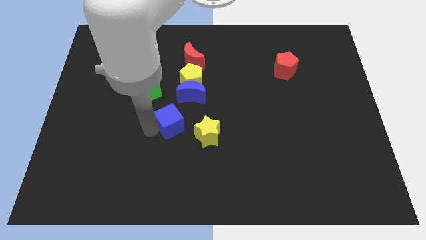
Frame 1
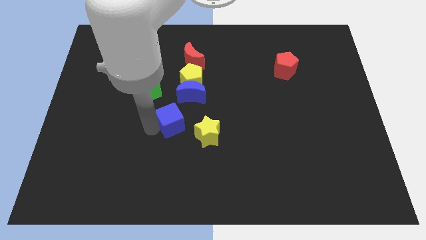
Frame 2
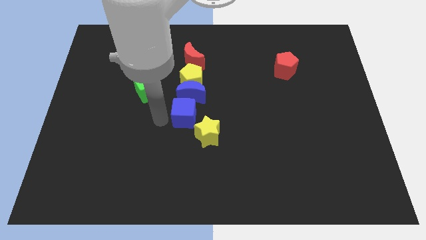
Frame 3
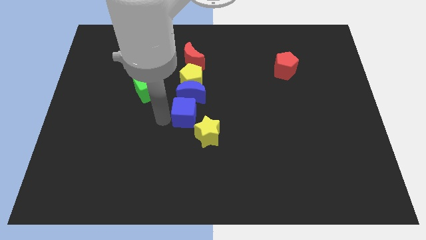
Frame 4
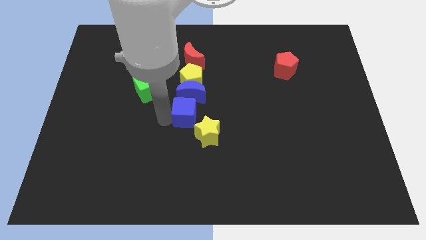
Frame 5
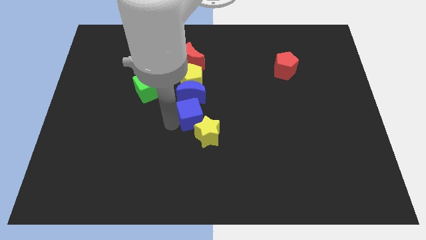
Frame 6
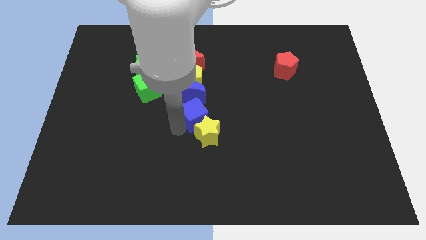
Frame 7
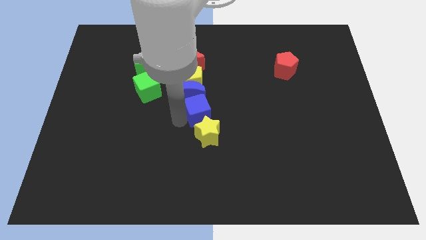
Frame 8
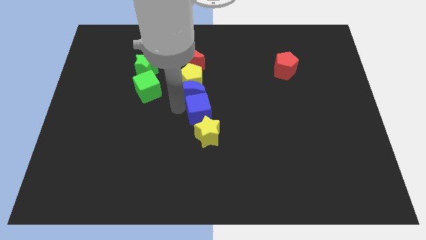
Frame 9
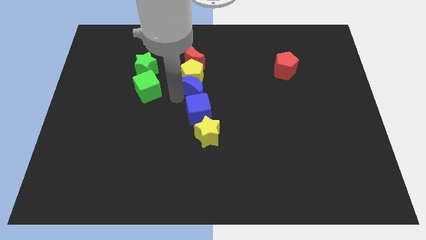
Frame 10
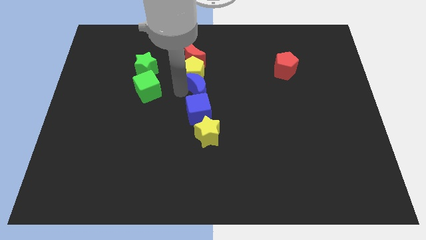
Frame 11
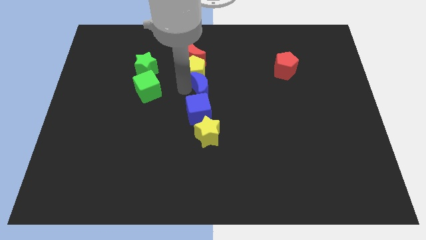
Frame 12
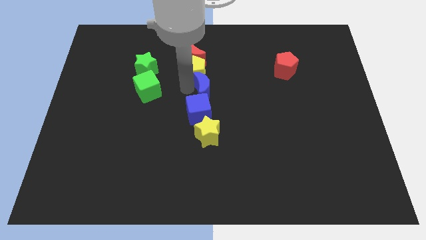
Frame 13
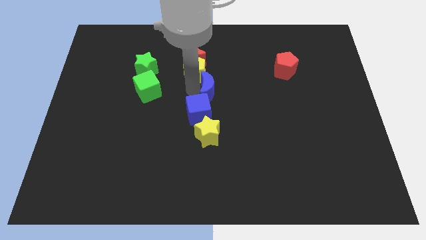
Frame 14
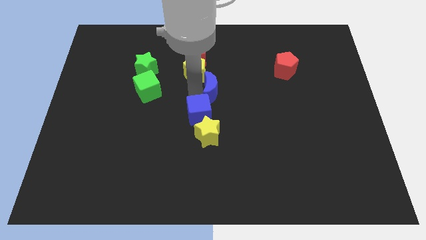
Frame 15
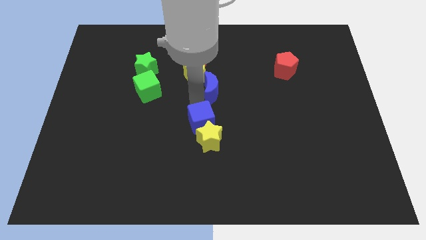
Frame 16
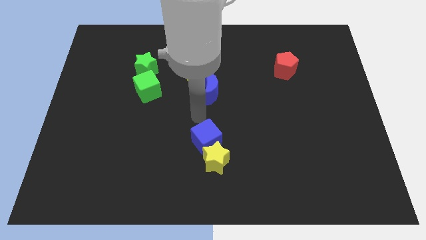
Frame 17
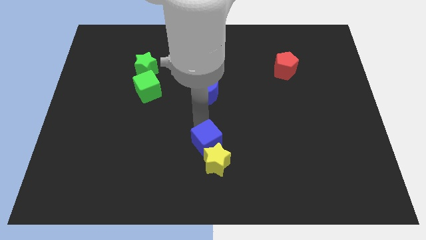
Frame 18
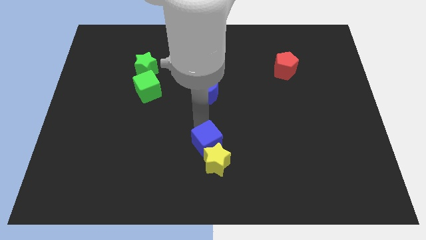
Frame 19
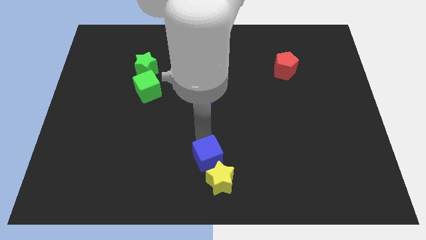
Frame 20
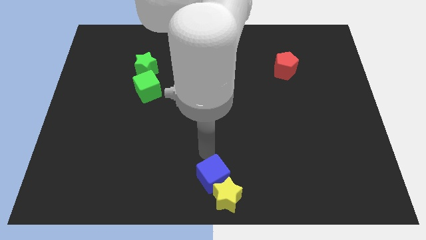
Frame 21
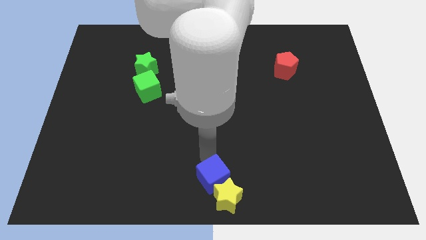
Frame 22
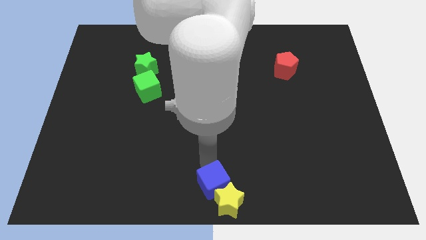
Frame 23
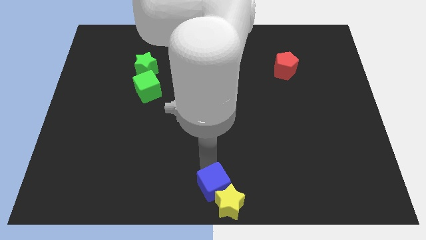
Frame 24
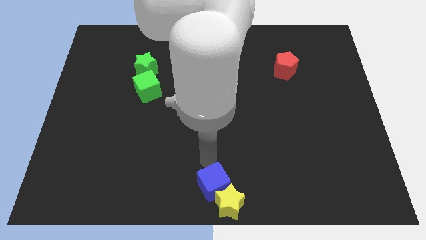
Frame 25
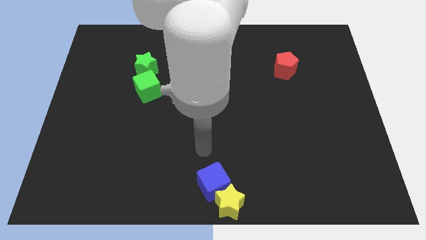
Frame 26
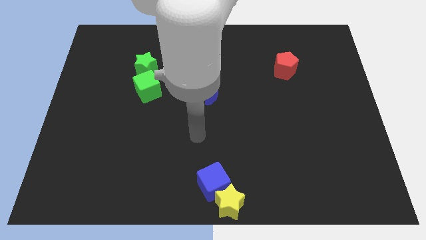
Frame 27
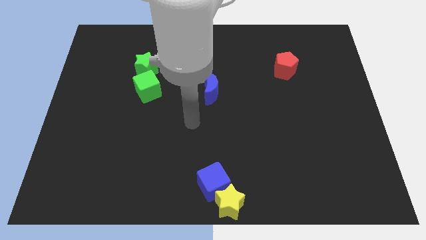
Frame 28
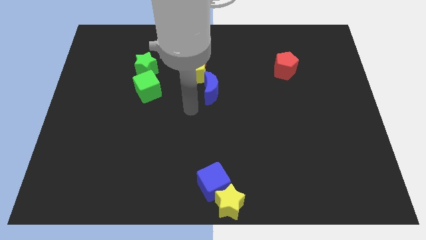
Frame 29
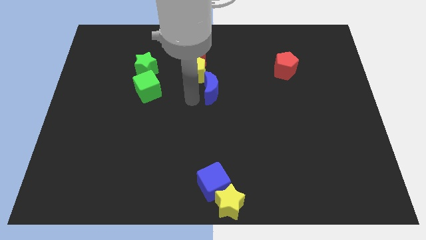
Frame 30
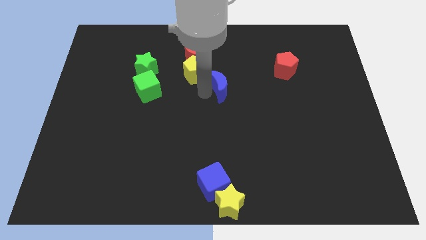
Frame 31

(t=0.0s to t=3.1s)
place the blue cube and the yellow star at the bottom center

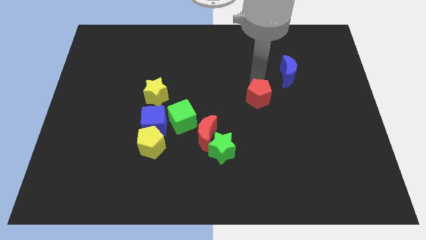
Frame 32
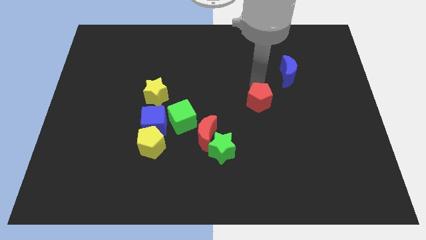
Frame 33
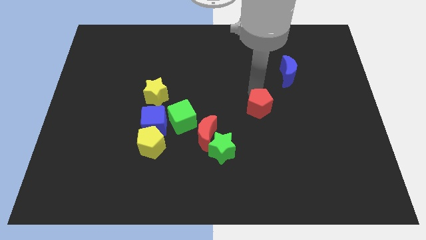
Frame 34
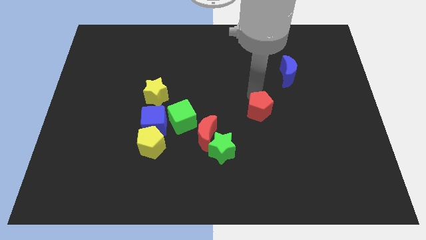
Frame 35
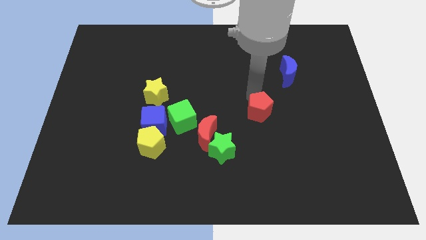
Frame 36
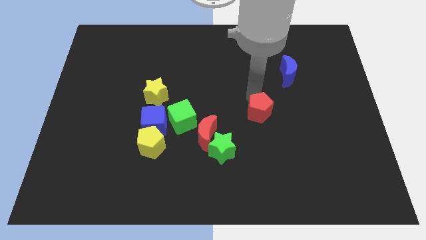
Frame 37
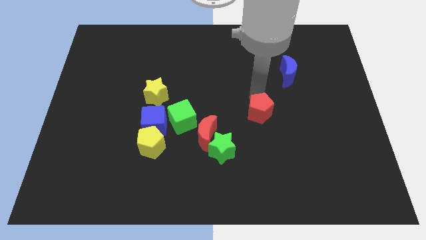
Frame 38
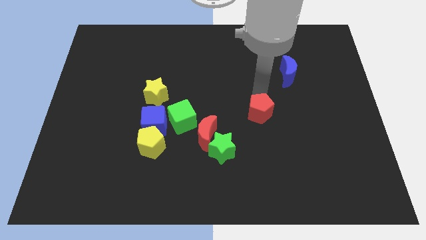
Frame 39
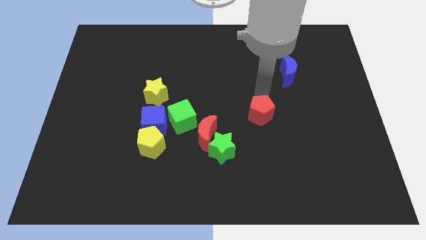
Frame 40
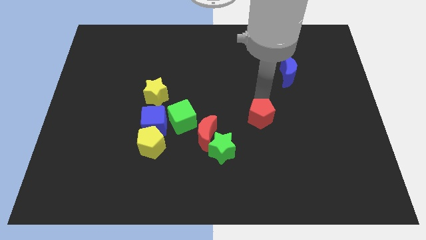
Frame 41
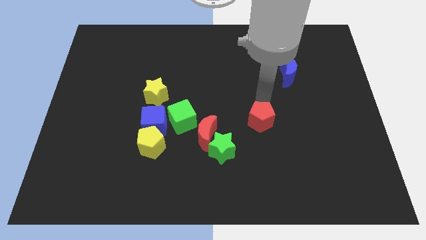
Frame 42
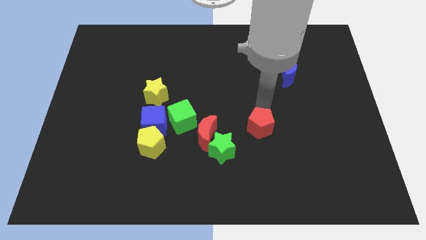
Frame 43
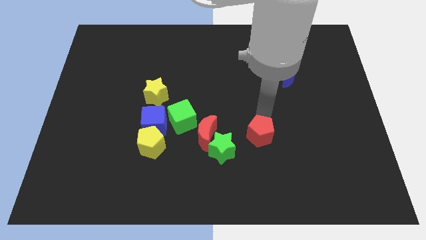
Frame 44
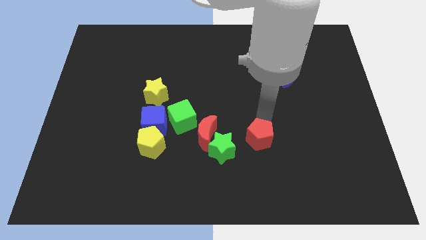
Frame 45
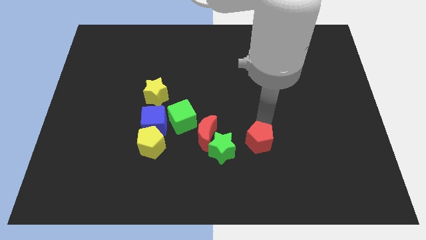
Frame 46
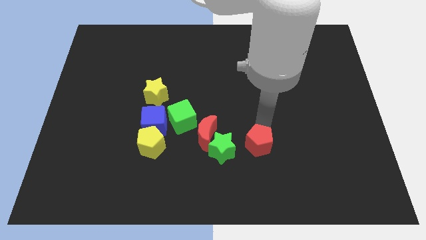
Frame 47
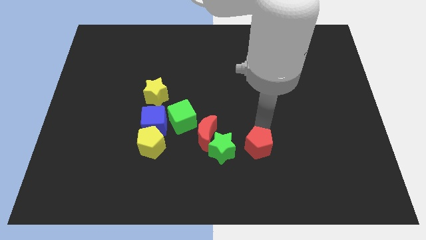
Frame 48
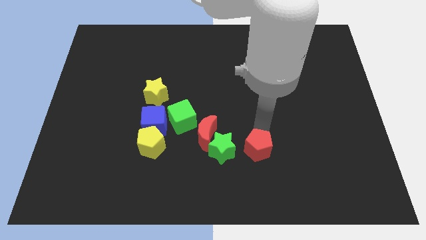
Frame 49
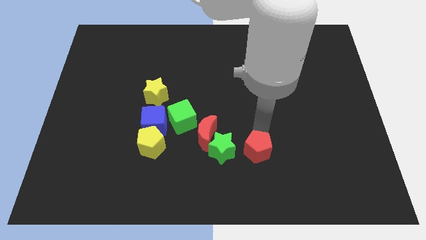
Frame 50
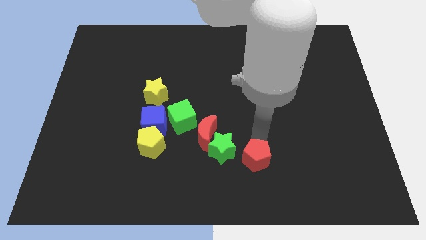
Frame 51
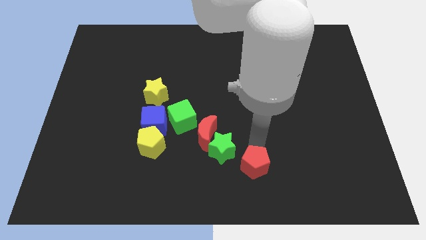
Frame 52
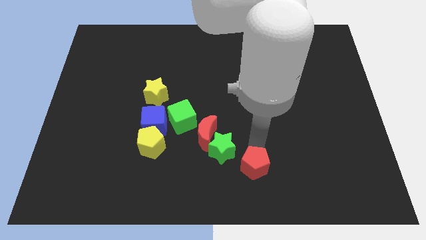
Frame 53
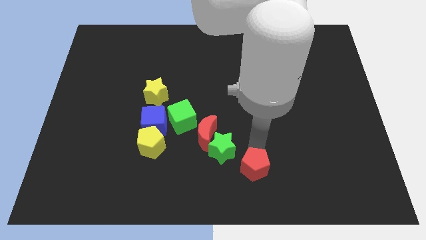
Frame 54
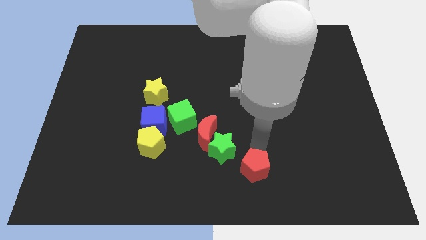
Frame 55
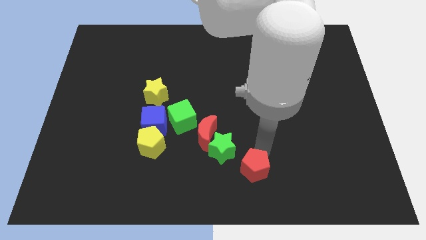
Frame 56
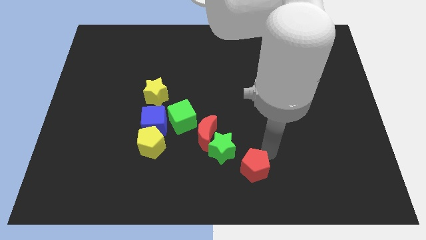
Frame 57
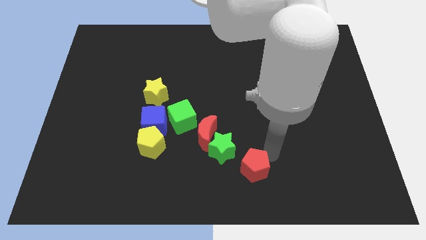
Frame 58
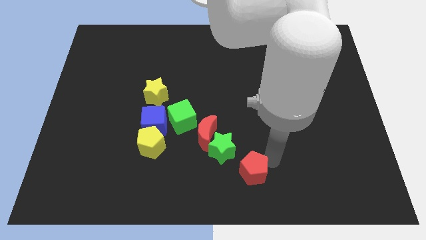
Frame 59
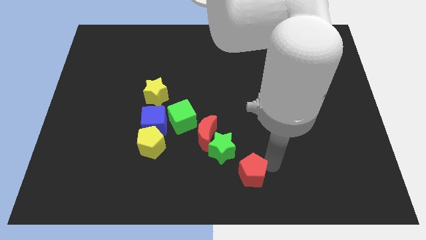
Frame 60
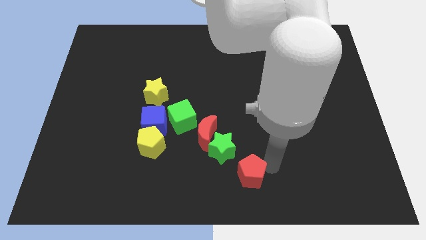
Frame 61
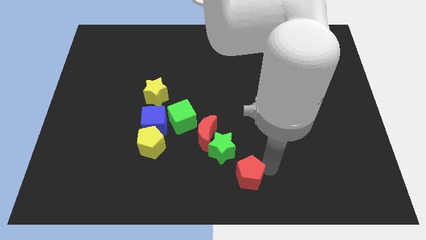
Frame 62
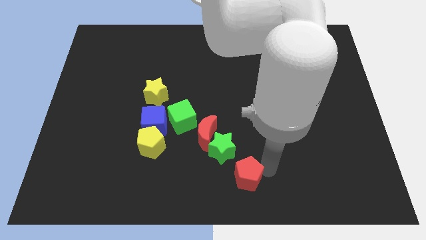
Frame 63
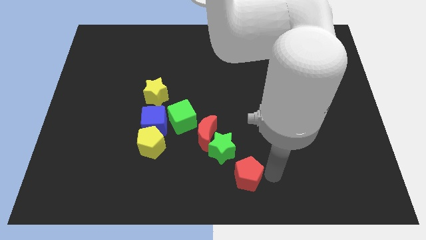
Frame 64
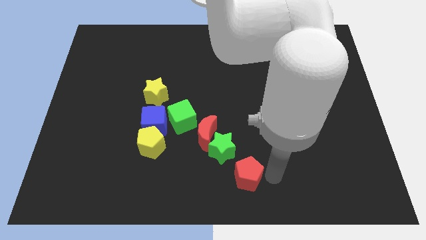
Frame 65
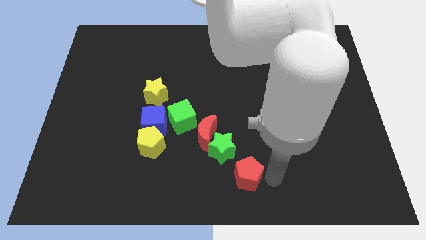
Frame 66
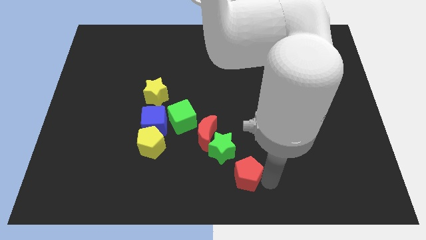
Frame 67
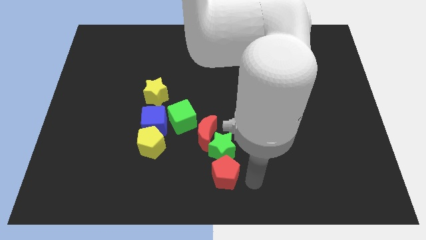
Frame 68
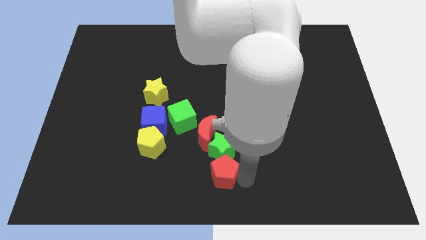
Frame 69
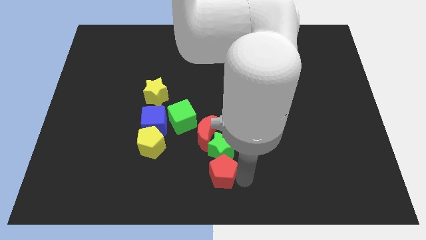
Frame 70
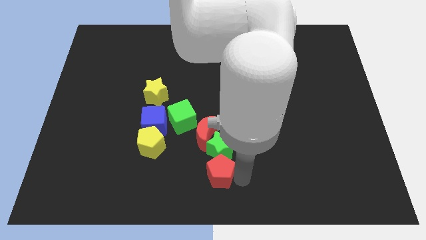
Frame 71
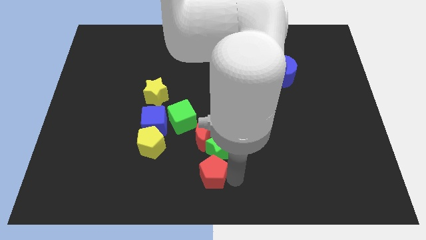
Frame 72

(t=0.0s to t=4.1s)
place red pentagon below the green star

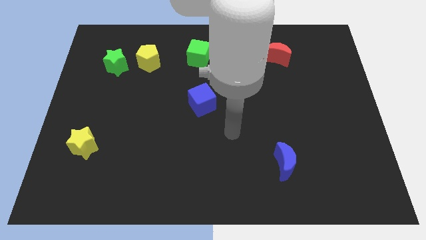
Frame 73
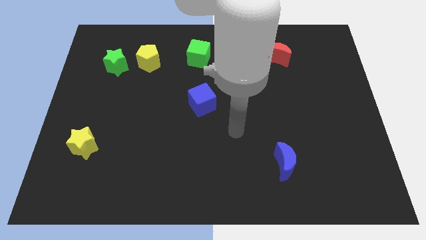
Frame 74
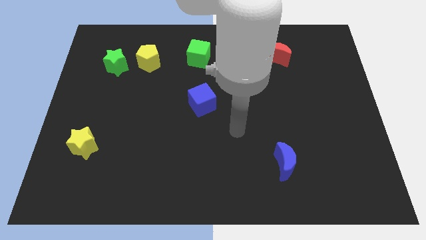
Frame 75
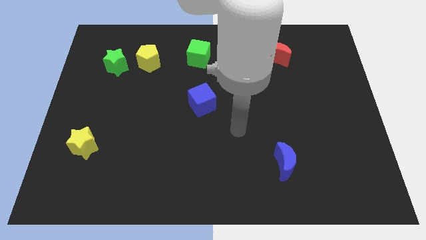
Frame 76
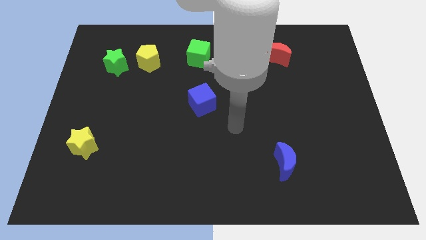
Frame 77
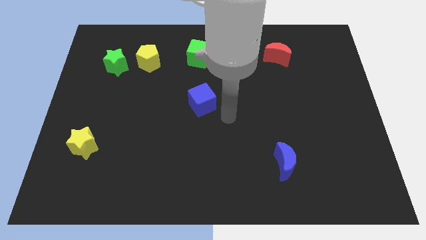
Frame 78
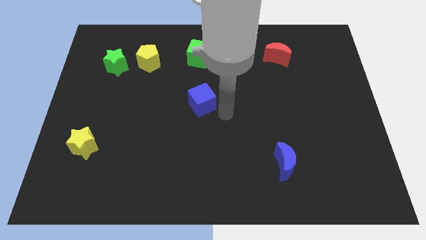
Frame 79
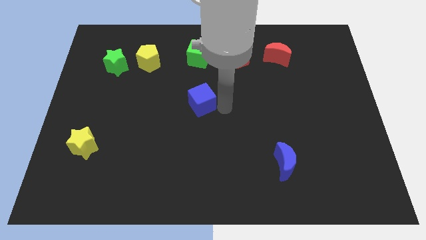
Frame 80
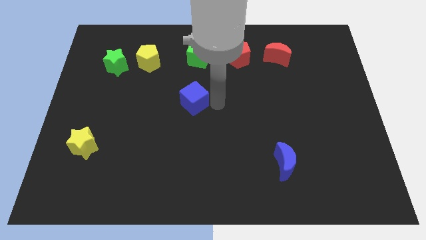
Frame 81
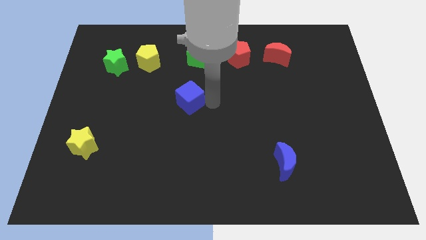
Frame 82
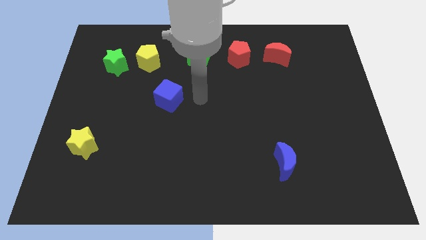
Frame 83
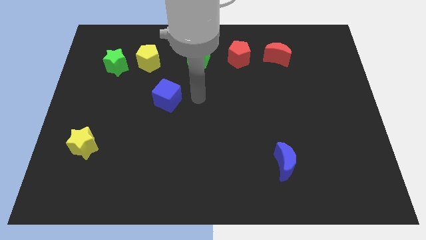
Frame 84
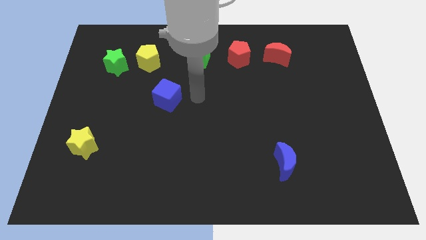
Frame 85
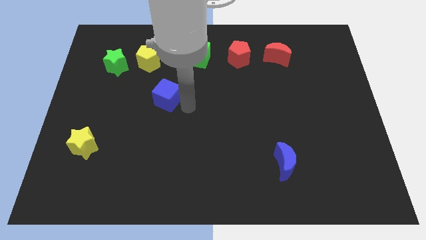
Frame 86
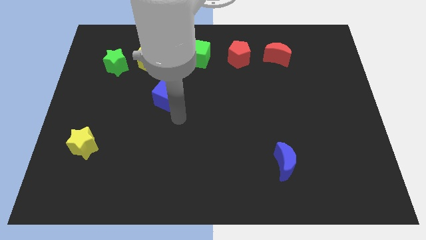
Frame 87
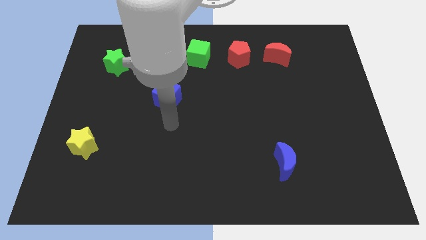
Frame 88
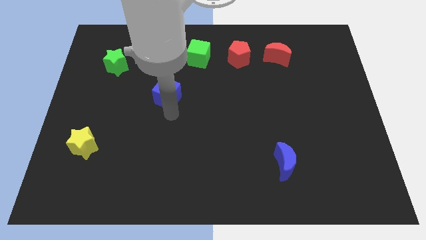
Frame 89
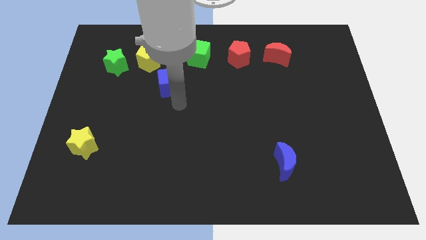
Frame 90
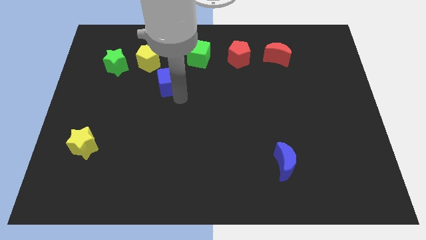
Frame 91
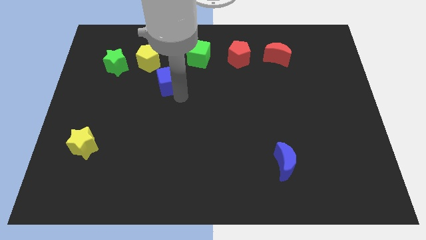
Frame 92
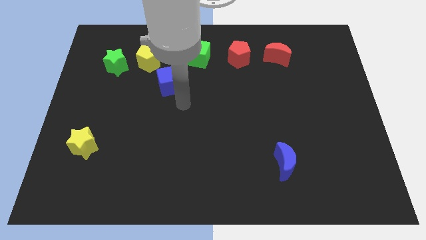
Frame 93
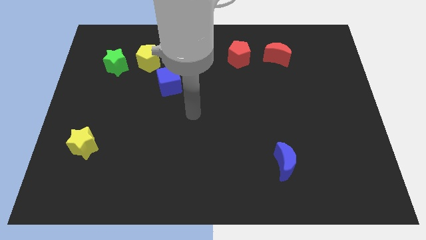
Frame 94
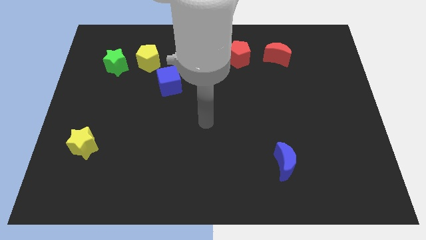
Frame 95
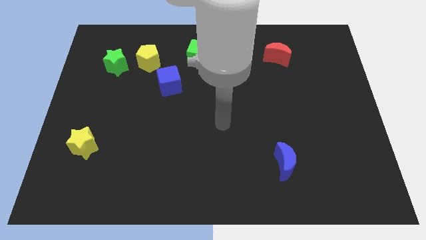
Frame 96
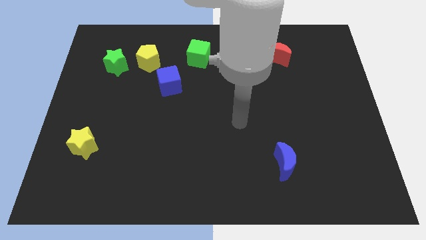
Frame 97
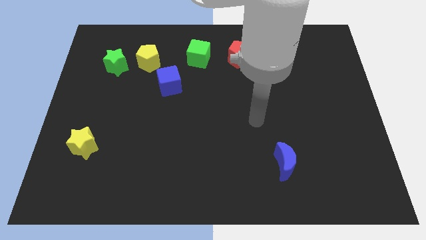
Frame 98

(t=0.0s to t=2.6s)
place the blue cube below the yellow pentagon
